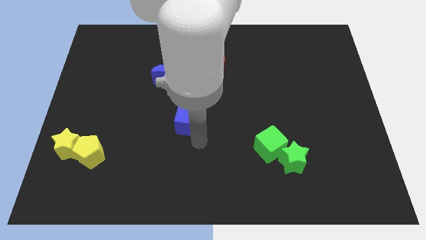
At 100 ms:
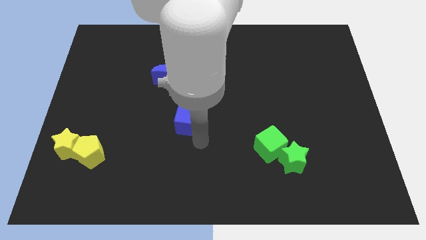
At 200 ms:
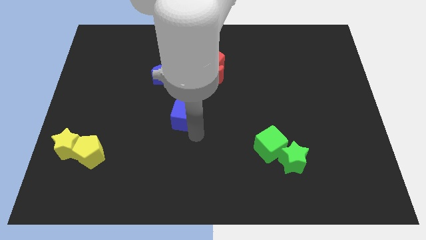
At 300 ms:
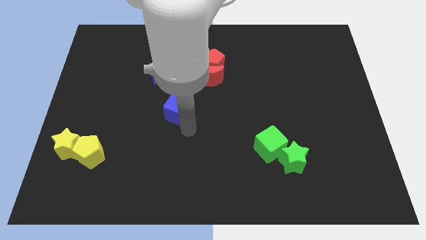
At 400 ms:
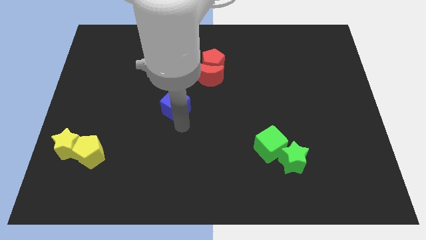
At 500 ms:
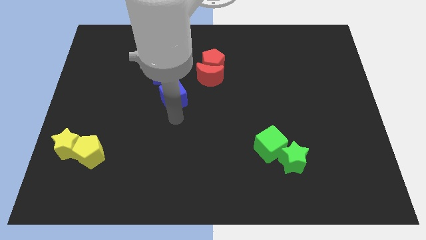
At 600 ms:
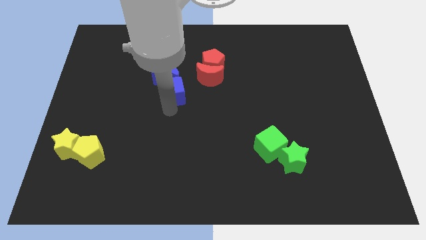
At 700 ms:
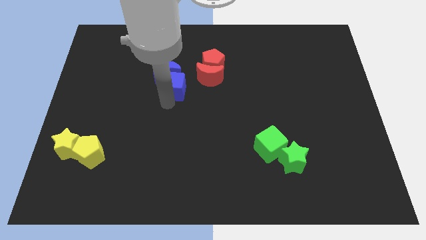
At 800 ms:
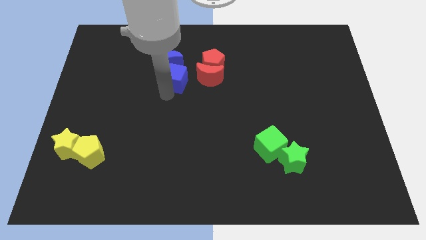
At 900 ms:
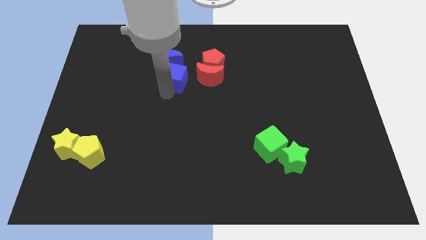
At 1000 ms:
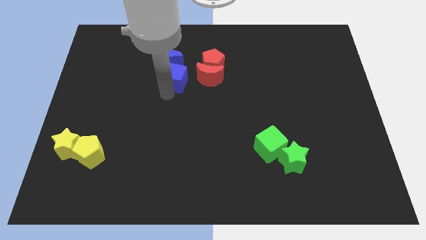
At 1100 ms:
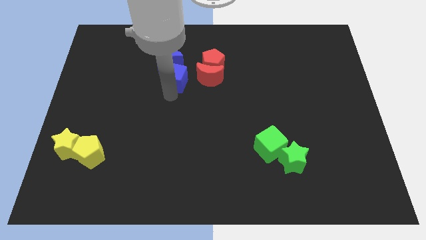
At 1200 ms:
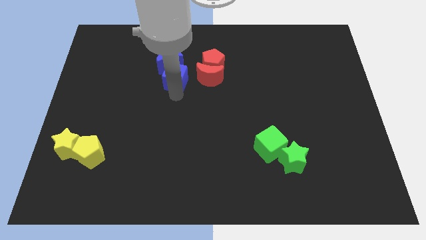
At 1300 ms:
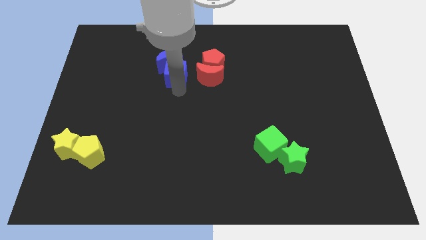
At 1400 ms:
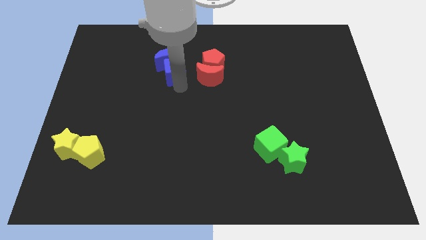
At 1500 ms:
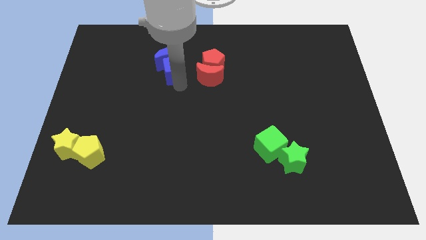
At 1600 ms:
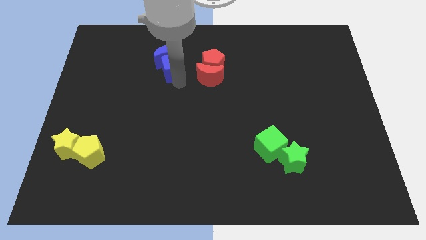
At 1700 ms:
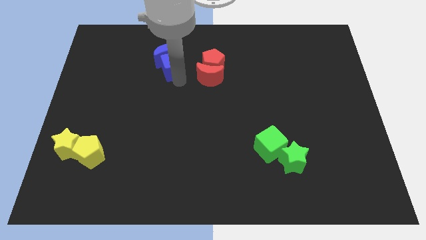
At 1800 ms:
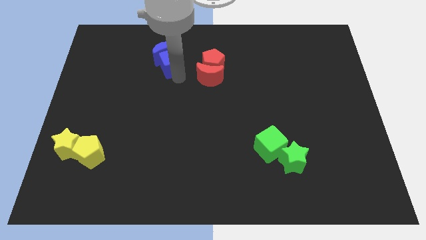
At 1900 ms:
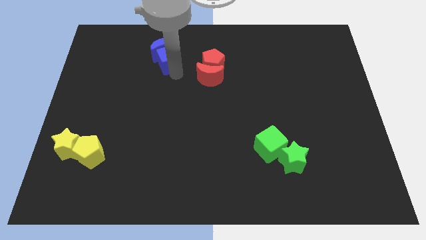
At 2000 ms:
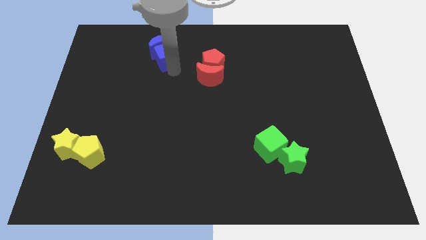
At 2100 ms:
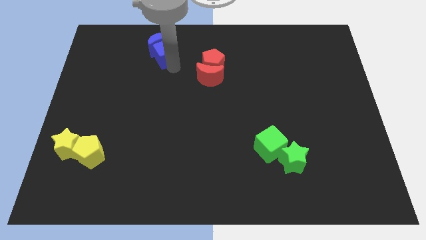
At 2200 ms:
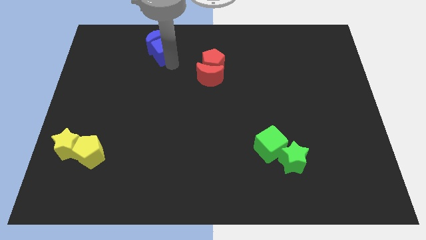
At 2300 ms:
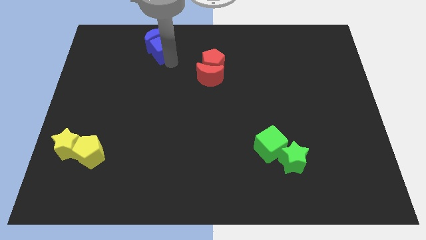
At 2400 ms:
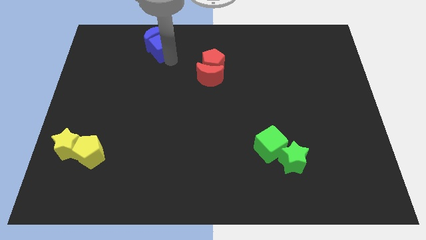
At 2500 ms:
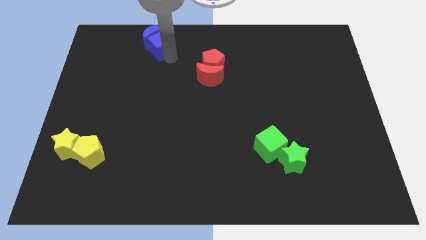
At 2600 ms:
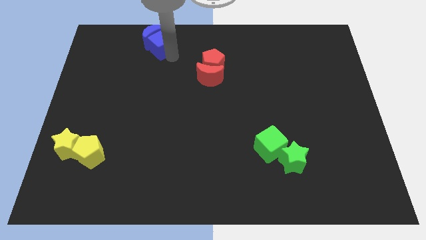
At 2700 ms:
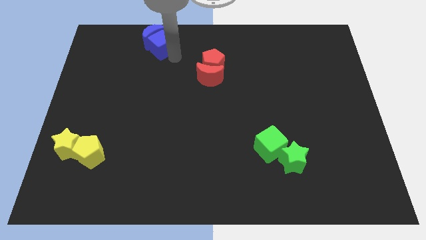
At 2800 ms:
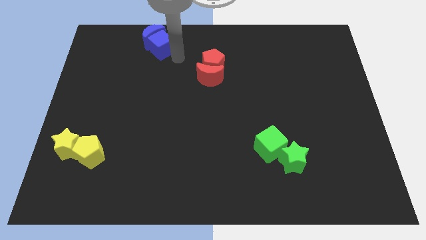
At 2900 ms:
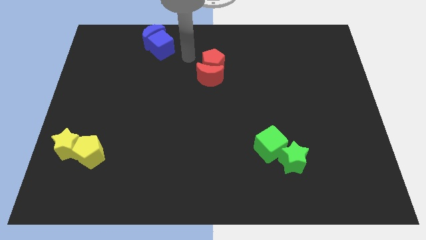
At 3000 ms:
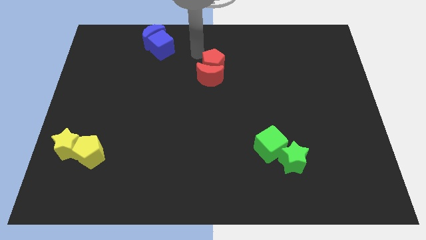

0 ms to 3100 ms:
place blue cube and blue crescent towards the top left side of the board

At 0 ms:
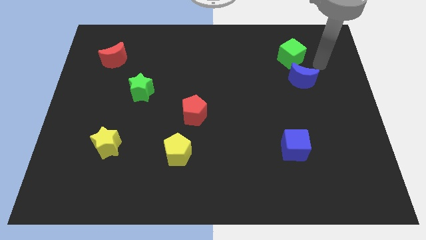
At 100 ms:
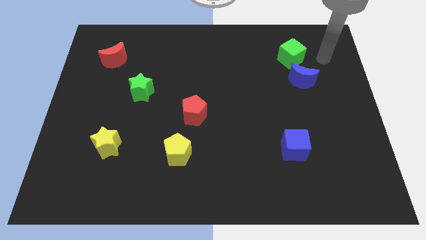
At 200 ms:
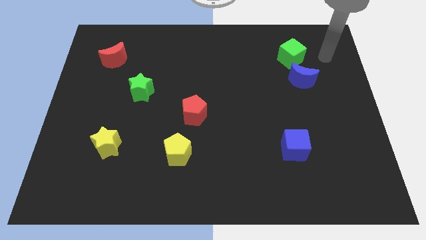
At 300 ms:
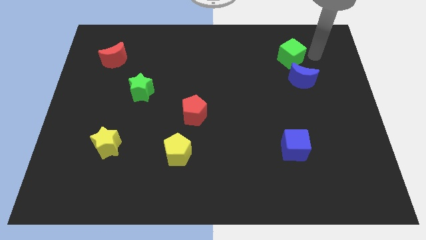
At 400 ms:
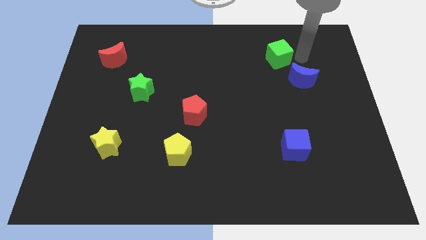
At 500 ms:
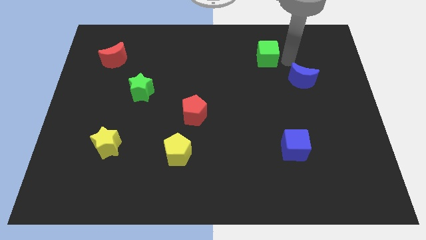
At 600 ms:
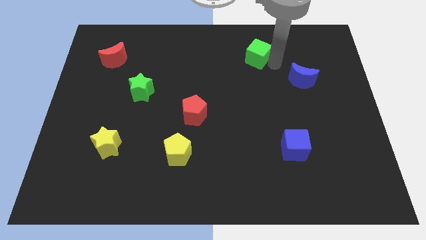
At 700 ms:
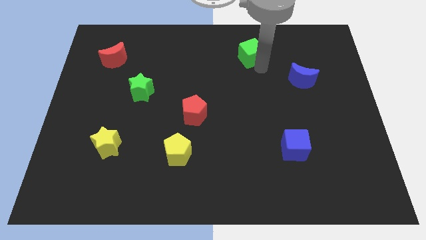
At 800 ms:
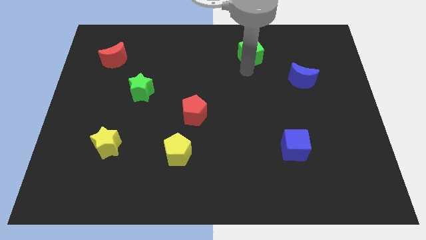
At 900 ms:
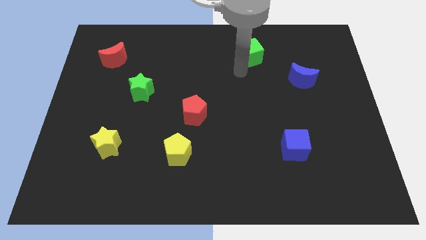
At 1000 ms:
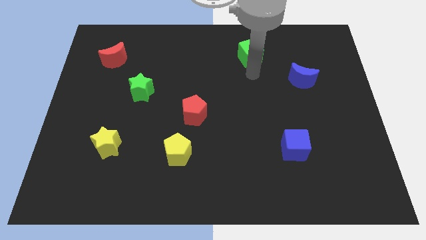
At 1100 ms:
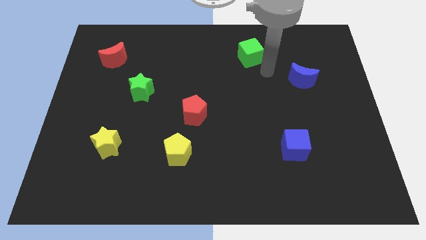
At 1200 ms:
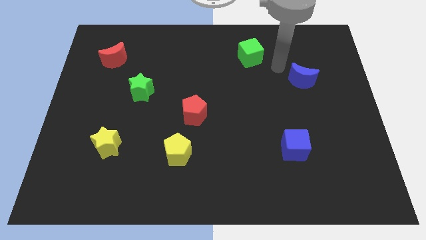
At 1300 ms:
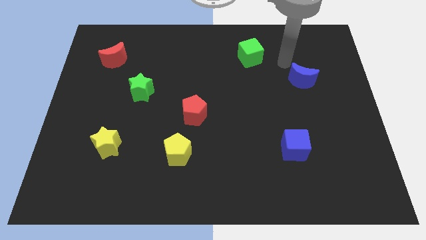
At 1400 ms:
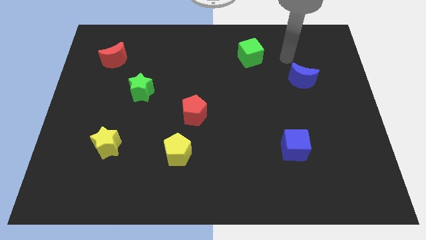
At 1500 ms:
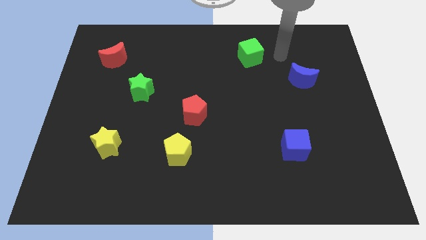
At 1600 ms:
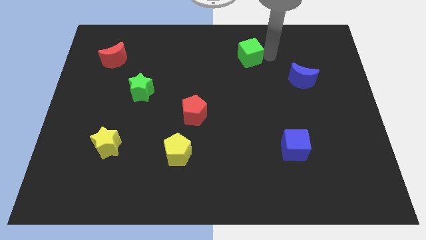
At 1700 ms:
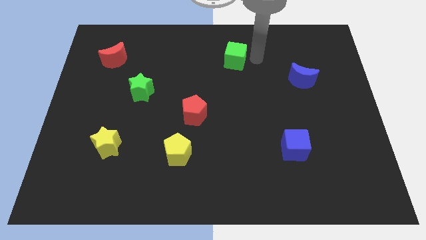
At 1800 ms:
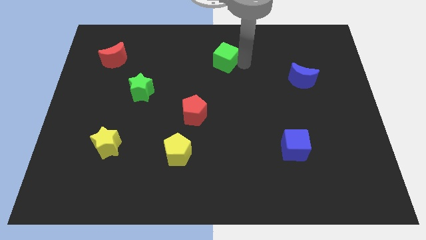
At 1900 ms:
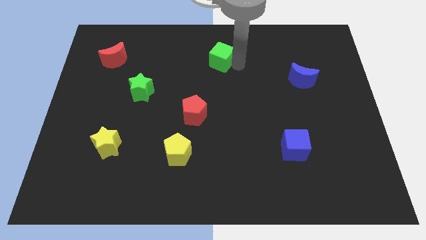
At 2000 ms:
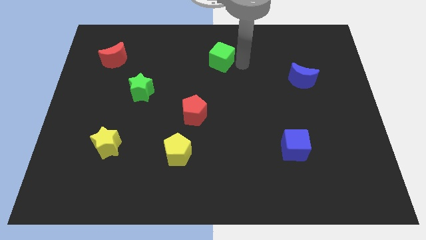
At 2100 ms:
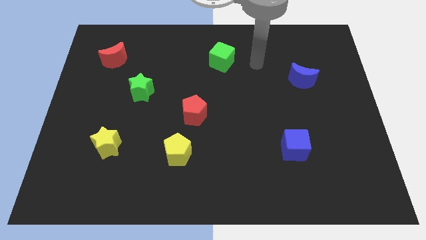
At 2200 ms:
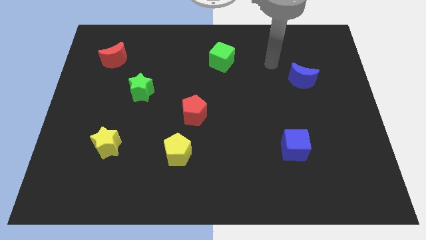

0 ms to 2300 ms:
push the green cube to the top center of the board

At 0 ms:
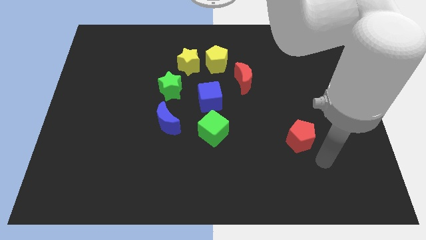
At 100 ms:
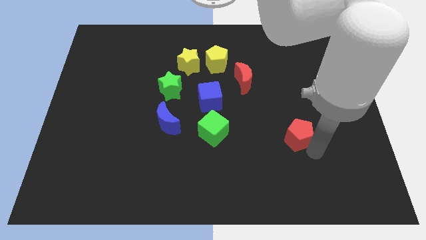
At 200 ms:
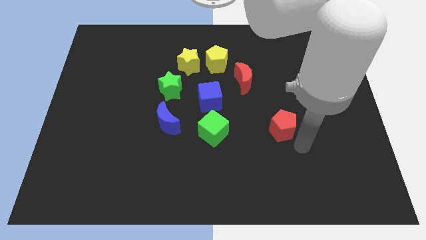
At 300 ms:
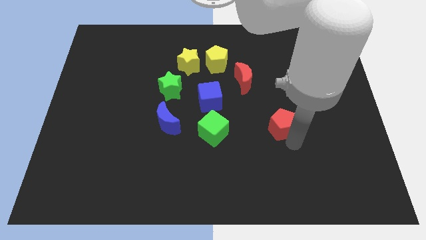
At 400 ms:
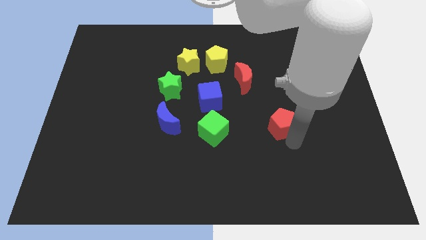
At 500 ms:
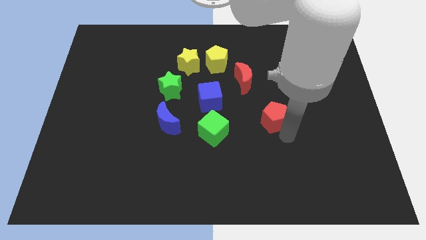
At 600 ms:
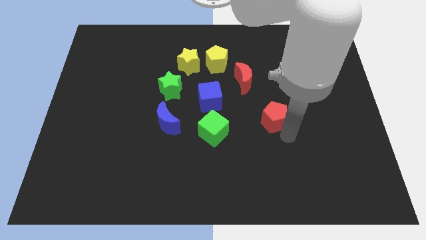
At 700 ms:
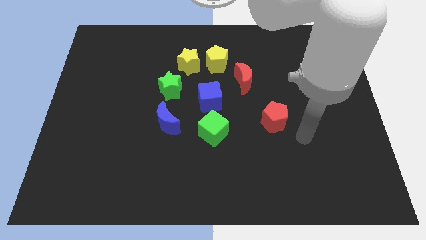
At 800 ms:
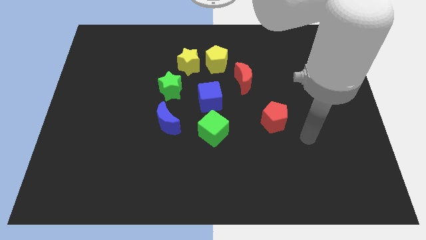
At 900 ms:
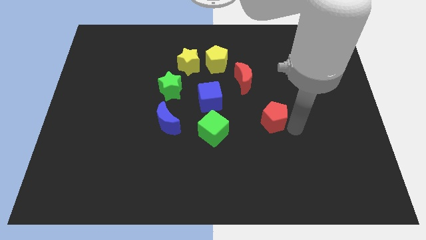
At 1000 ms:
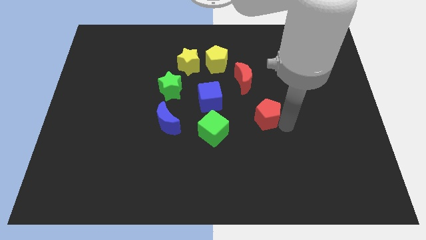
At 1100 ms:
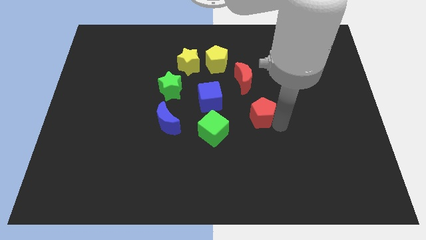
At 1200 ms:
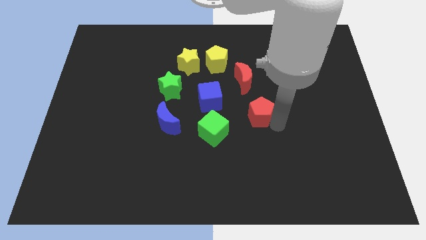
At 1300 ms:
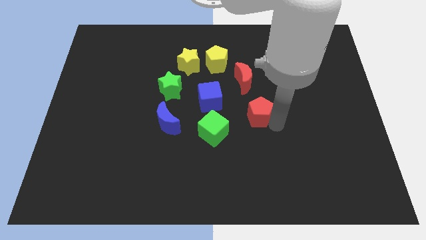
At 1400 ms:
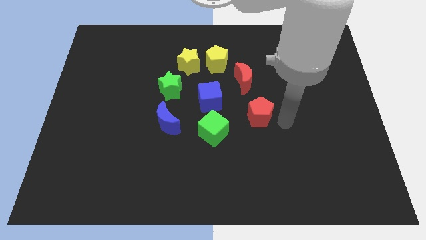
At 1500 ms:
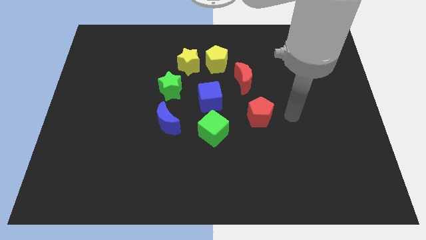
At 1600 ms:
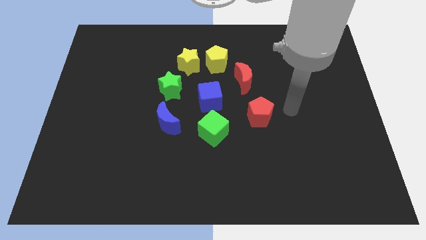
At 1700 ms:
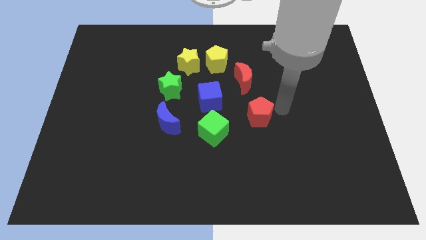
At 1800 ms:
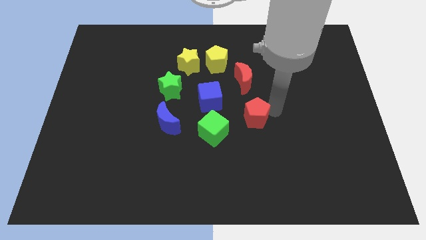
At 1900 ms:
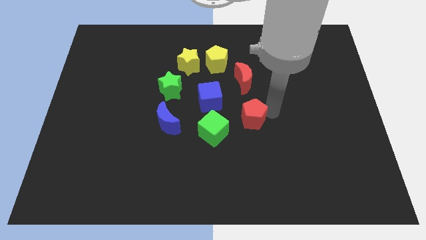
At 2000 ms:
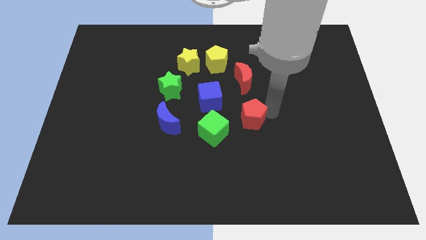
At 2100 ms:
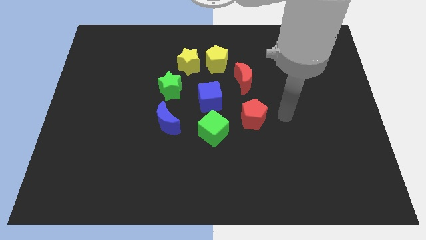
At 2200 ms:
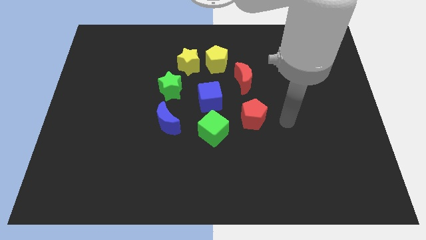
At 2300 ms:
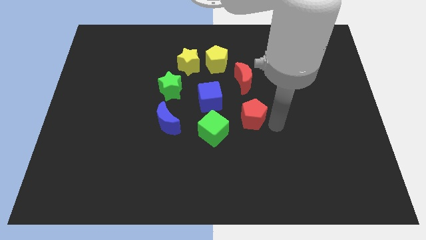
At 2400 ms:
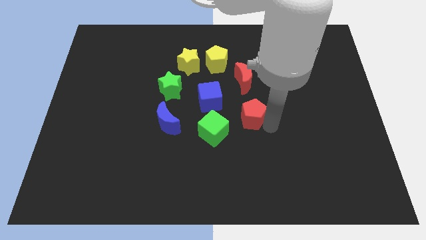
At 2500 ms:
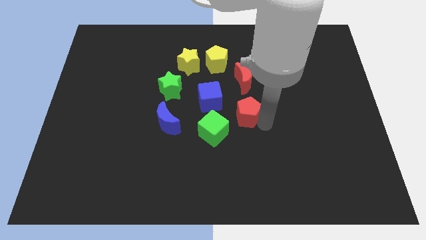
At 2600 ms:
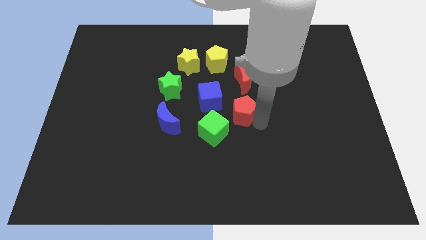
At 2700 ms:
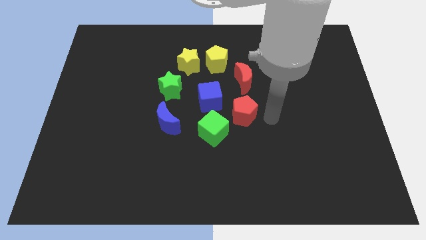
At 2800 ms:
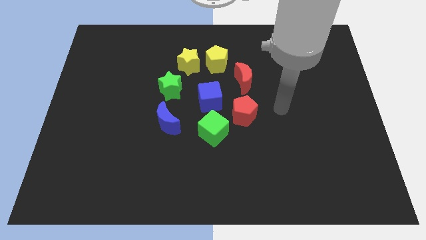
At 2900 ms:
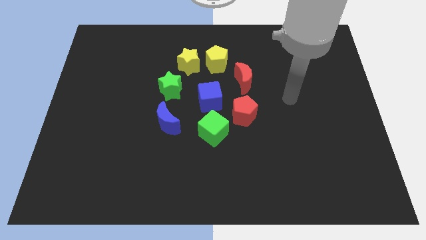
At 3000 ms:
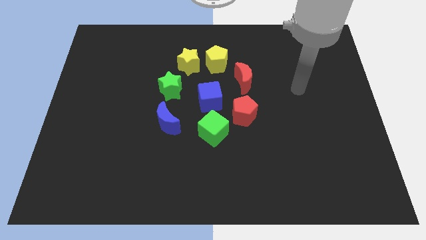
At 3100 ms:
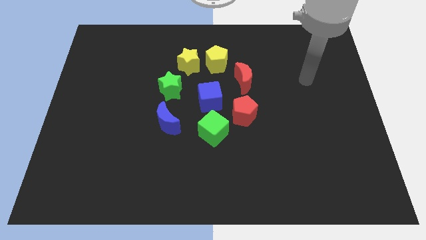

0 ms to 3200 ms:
move the red pentagon to the bottom of the red crescent

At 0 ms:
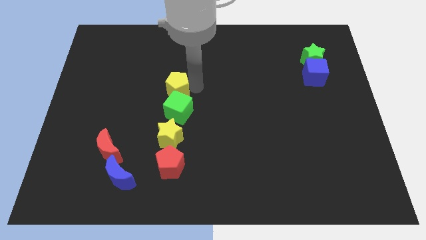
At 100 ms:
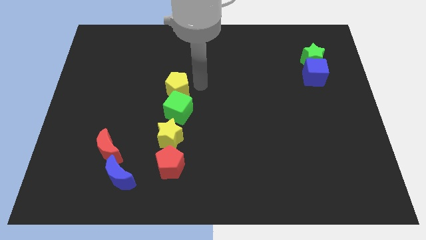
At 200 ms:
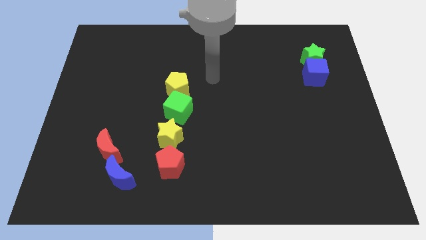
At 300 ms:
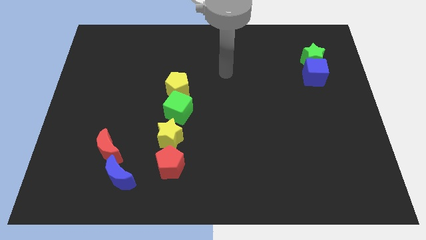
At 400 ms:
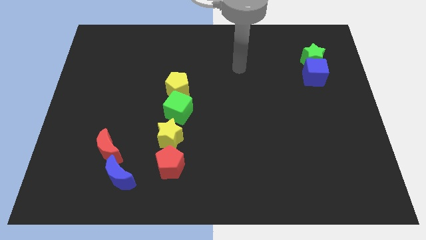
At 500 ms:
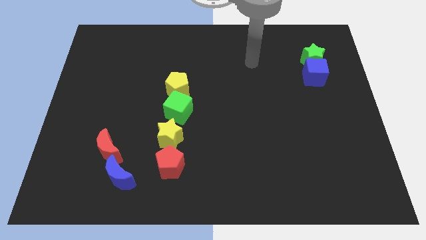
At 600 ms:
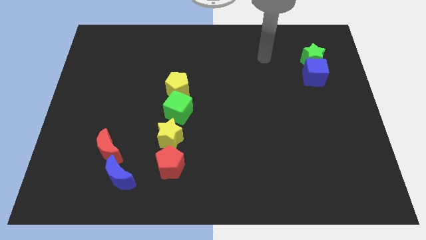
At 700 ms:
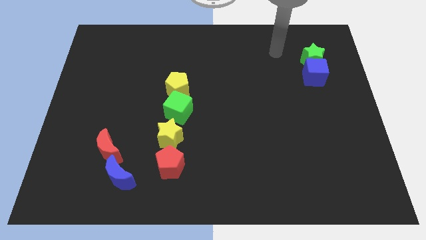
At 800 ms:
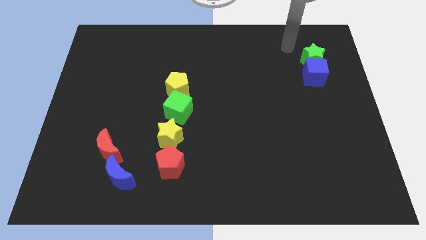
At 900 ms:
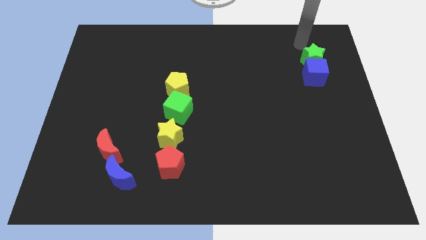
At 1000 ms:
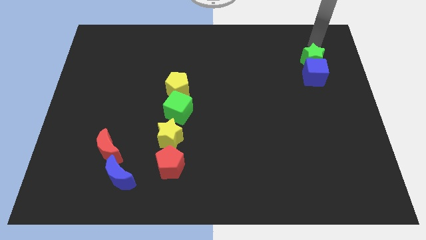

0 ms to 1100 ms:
drag your hand away from the yellow pentagon
